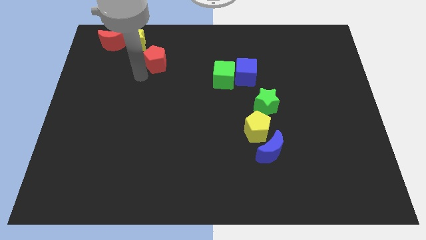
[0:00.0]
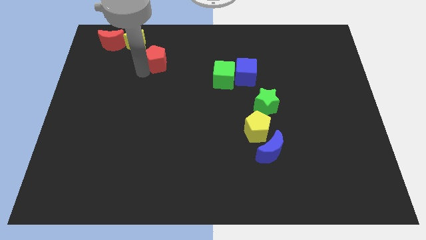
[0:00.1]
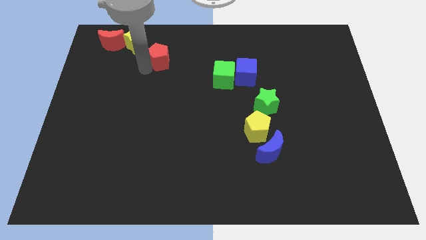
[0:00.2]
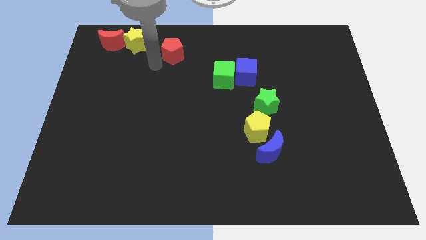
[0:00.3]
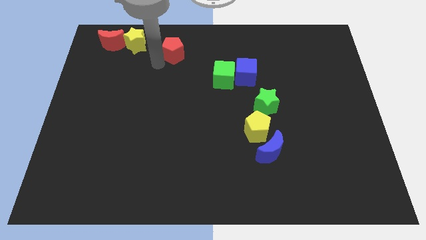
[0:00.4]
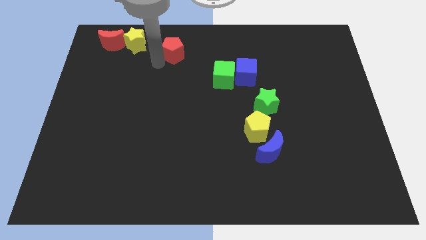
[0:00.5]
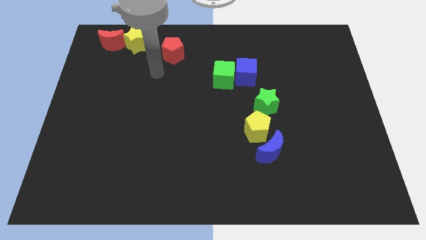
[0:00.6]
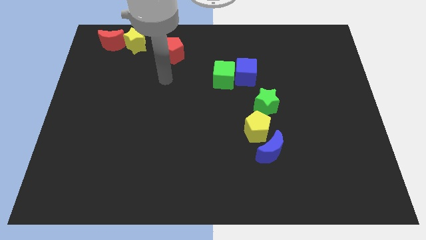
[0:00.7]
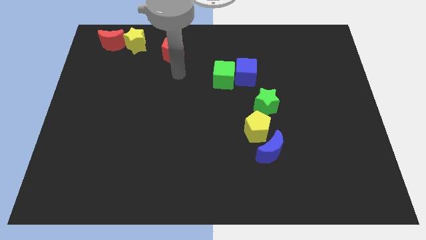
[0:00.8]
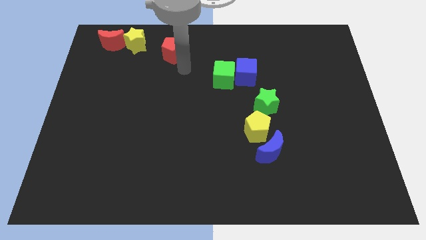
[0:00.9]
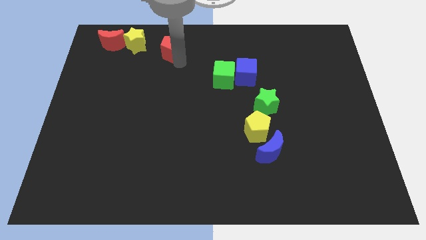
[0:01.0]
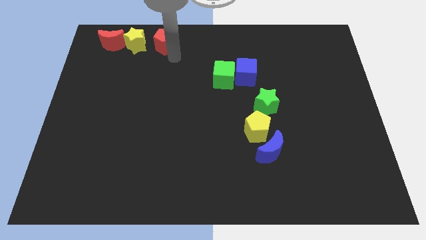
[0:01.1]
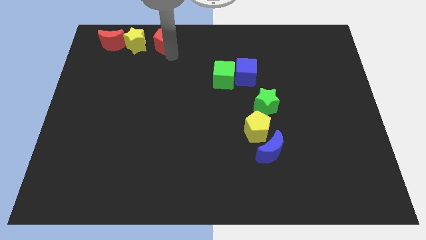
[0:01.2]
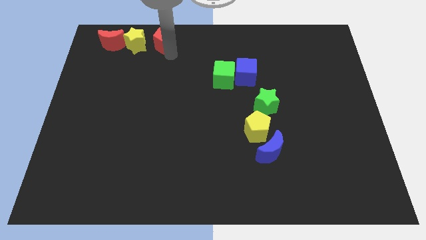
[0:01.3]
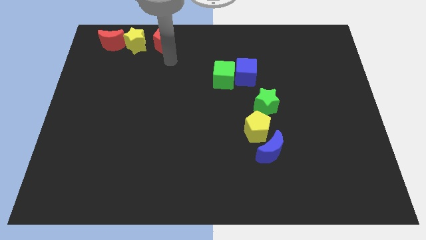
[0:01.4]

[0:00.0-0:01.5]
move the red pentagon to the right of the yellow star

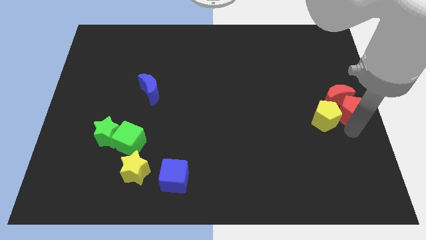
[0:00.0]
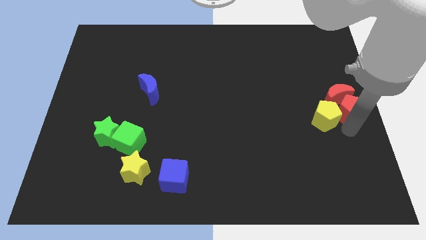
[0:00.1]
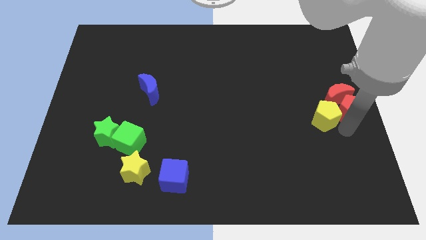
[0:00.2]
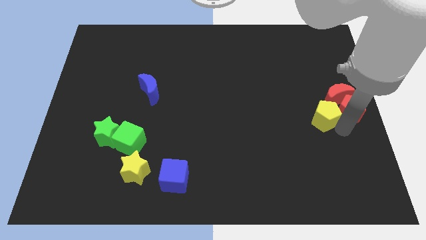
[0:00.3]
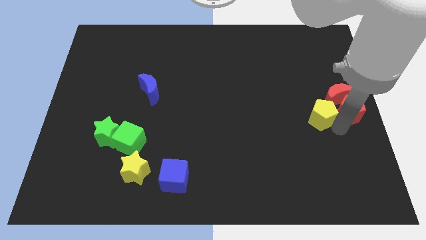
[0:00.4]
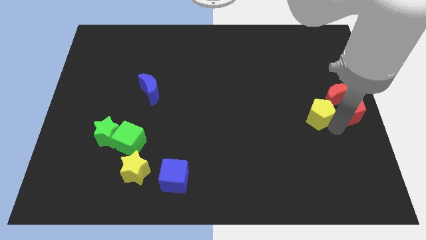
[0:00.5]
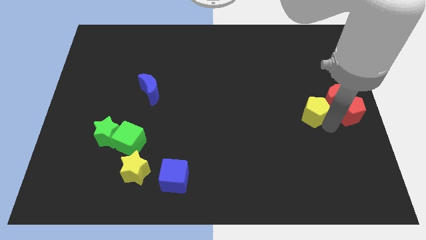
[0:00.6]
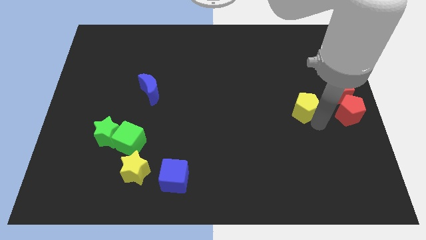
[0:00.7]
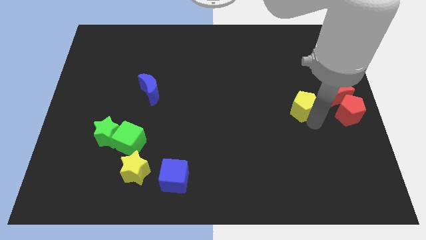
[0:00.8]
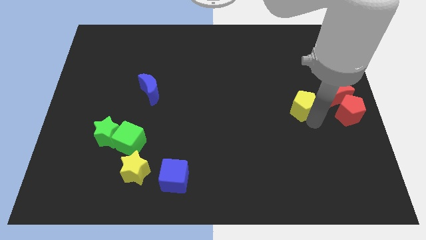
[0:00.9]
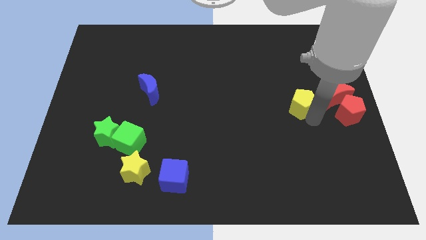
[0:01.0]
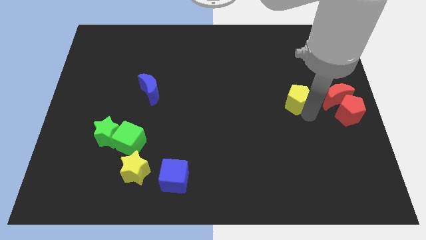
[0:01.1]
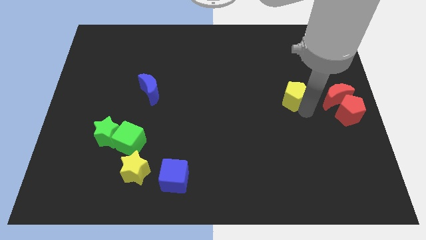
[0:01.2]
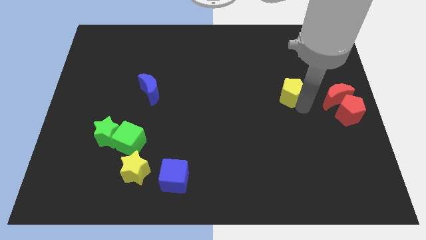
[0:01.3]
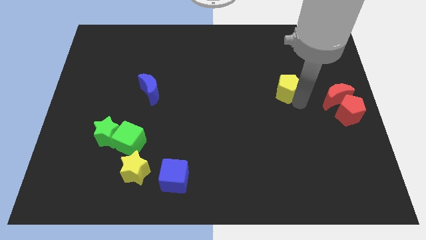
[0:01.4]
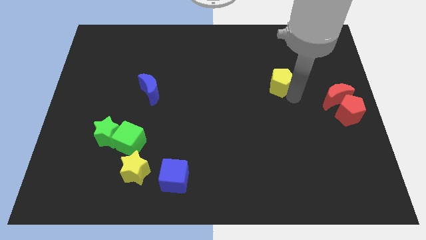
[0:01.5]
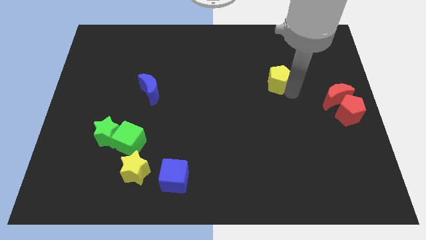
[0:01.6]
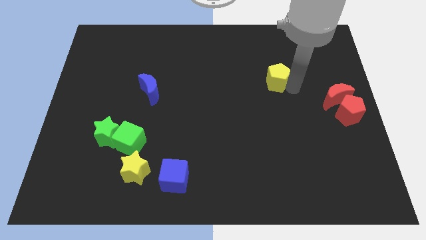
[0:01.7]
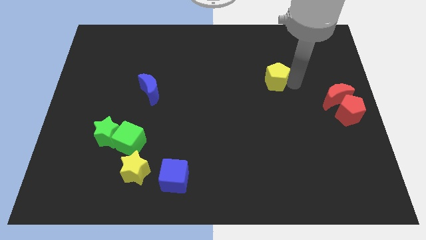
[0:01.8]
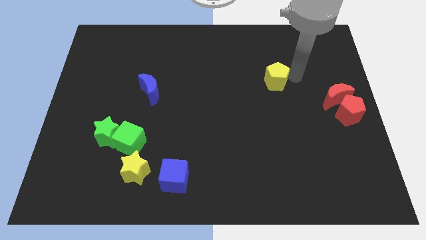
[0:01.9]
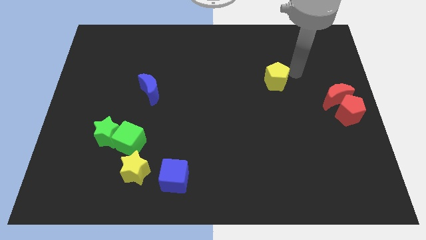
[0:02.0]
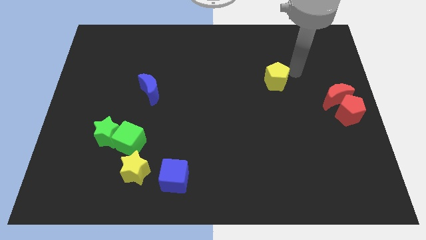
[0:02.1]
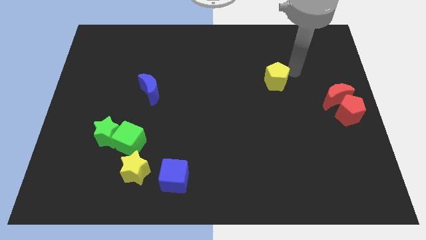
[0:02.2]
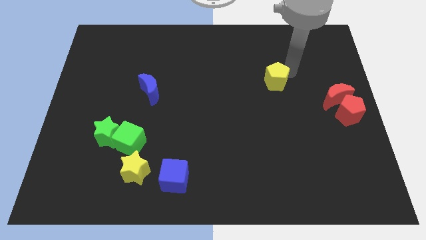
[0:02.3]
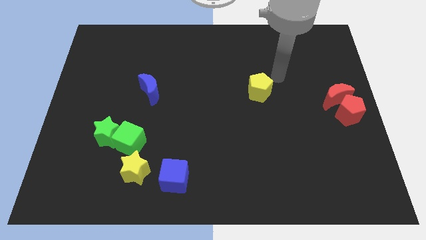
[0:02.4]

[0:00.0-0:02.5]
move the yellow pentagon to the top of the board

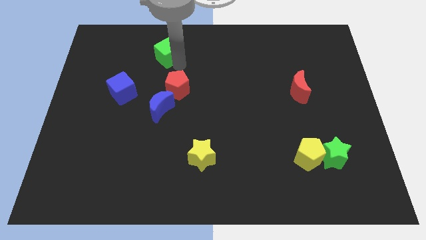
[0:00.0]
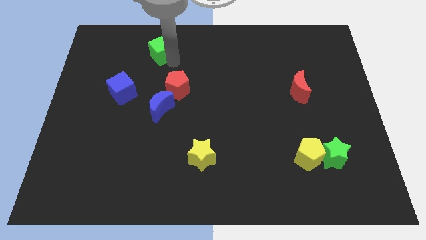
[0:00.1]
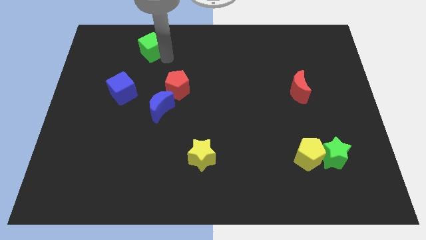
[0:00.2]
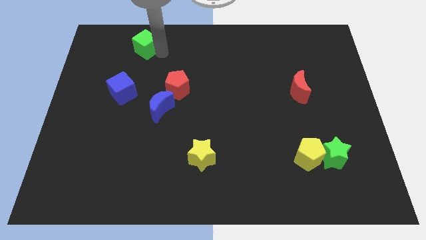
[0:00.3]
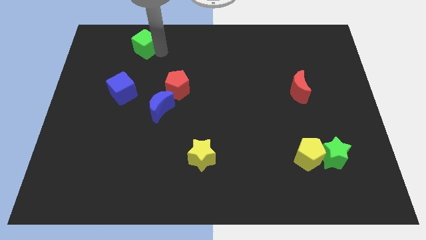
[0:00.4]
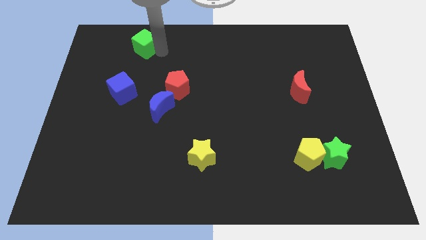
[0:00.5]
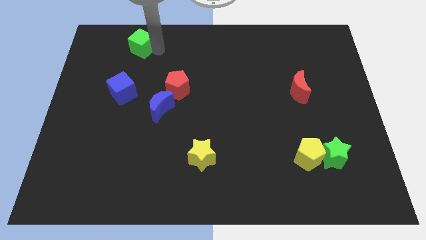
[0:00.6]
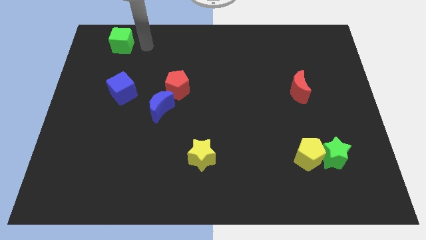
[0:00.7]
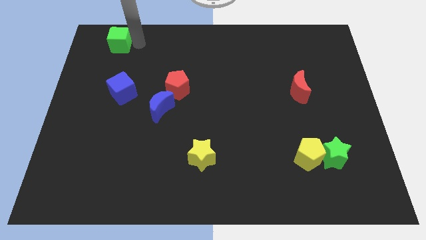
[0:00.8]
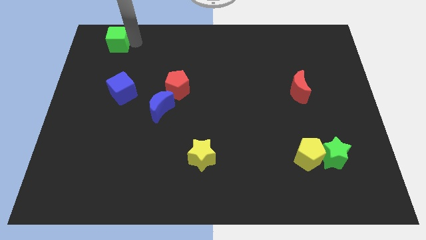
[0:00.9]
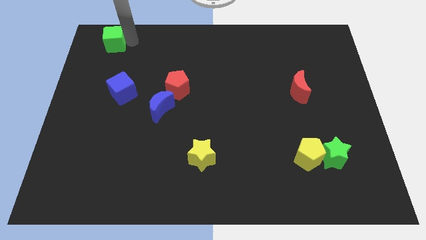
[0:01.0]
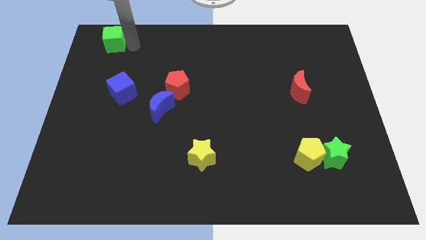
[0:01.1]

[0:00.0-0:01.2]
drag the green cube towards the top left corner

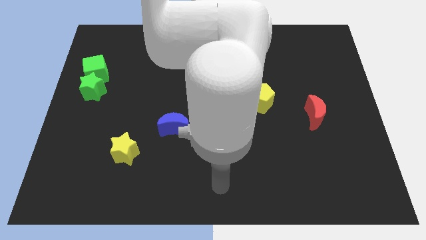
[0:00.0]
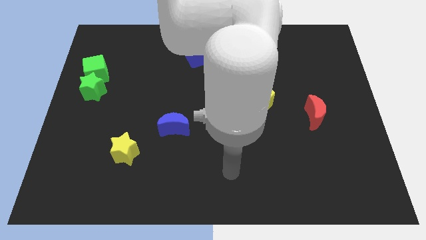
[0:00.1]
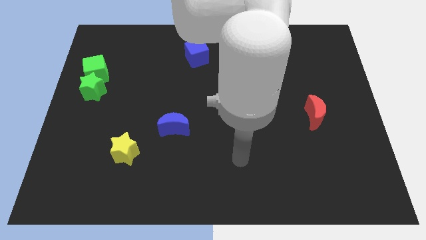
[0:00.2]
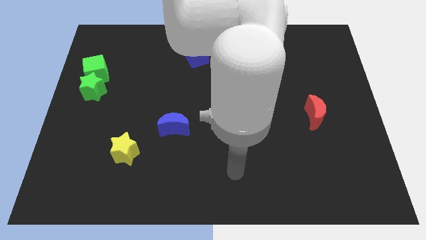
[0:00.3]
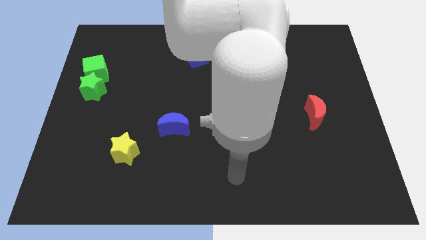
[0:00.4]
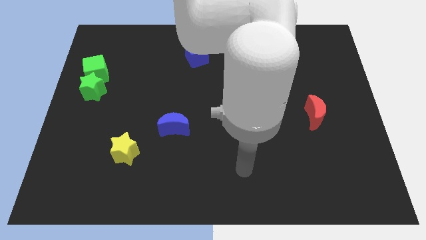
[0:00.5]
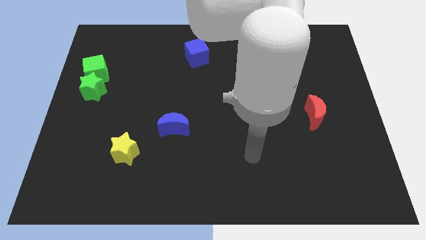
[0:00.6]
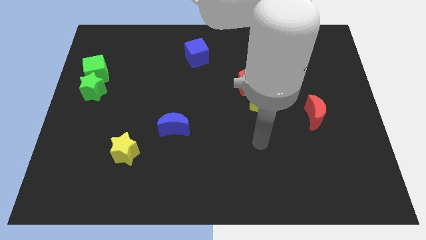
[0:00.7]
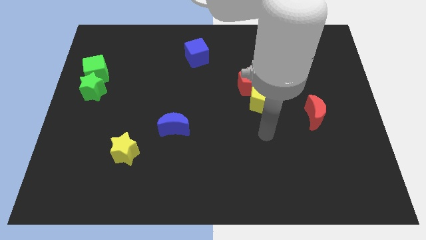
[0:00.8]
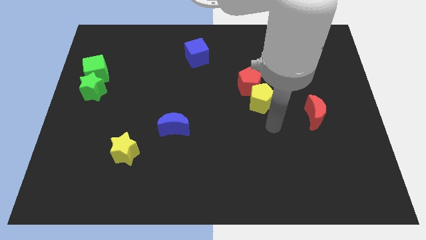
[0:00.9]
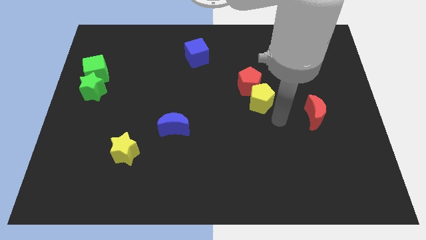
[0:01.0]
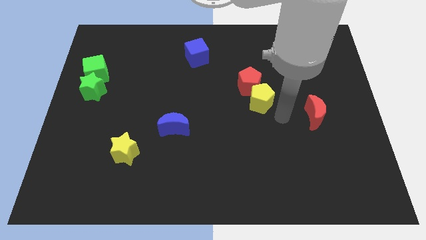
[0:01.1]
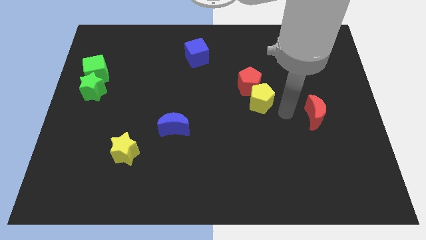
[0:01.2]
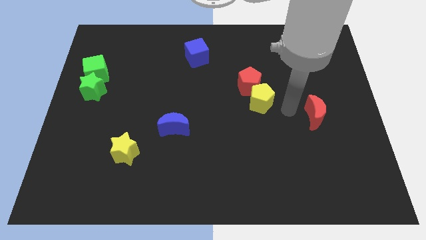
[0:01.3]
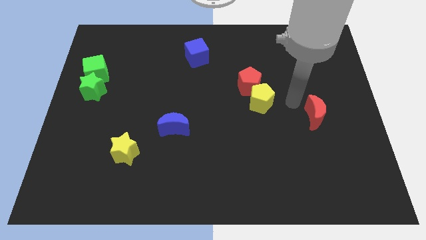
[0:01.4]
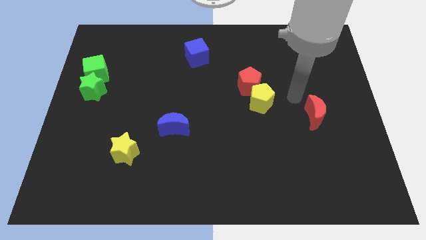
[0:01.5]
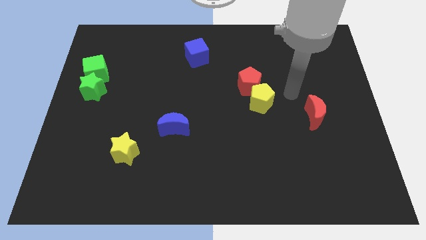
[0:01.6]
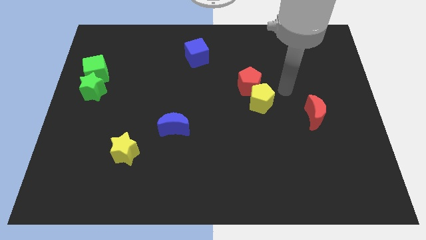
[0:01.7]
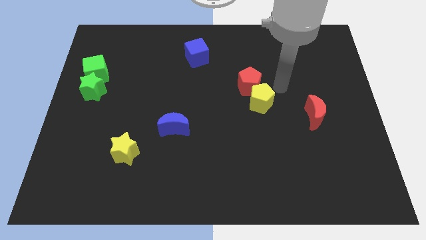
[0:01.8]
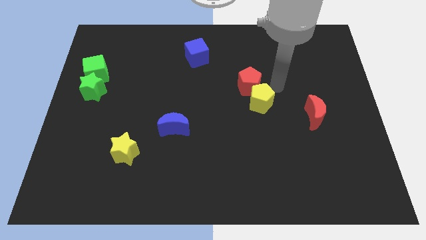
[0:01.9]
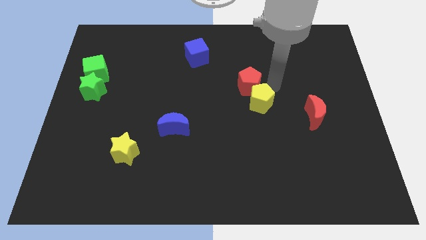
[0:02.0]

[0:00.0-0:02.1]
move your arm to the top side of the yellow pentagon

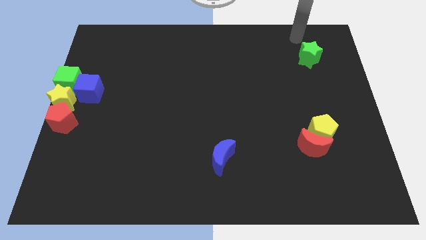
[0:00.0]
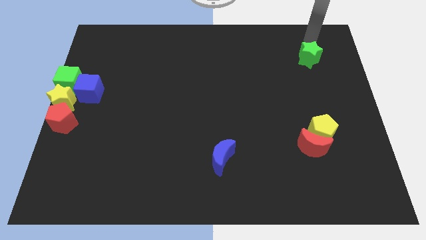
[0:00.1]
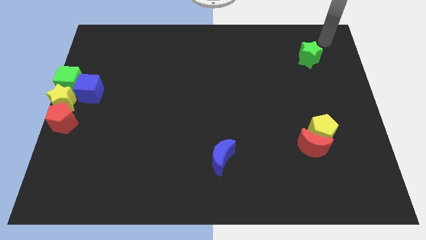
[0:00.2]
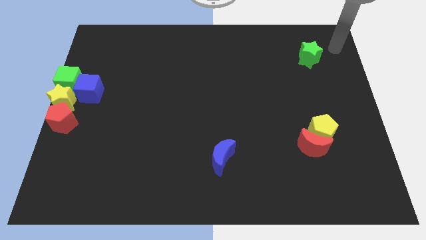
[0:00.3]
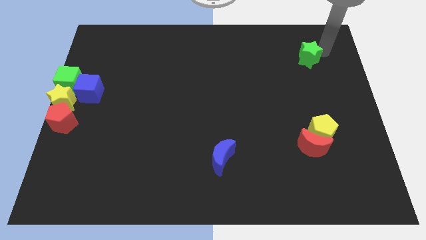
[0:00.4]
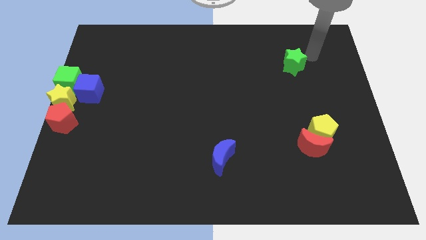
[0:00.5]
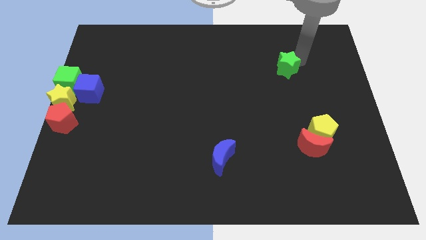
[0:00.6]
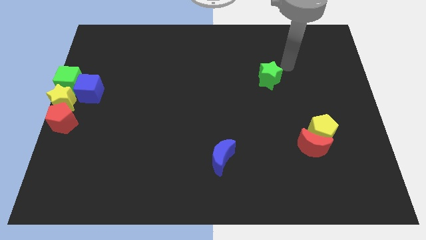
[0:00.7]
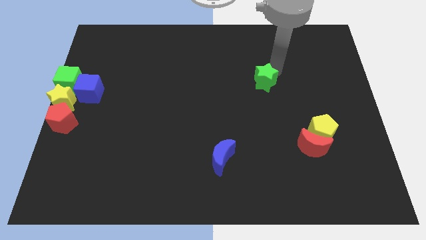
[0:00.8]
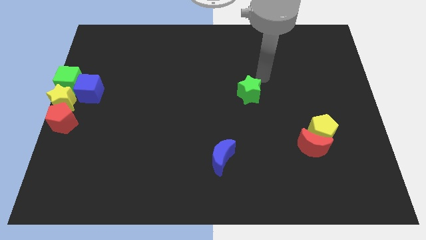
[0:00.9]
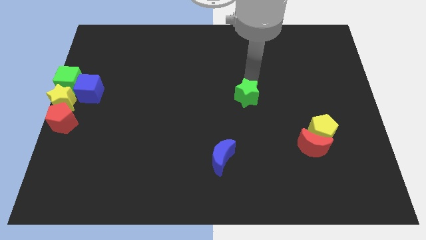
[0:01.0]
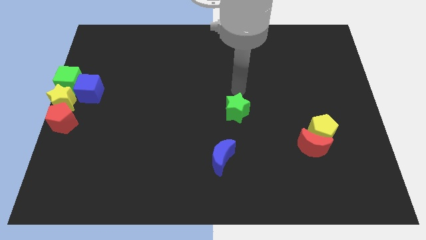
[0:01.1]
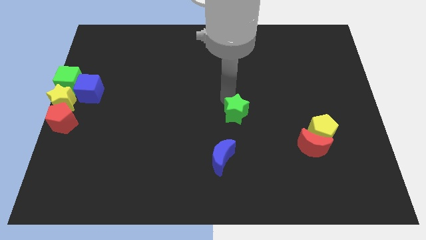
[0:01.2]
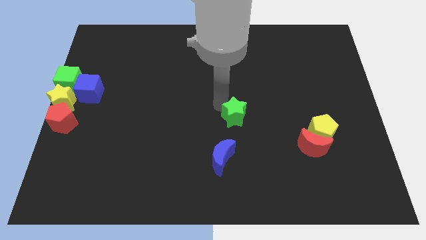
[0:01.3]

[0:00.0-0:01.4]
push the green star to the top of the blue crescent
